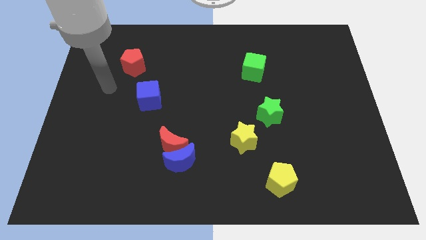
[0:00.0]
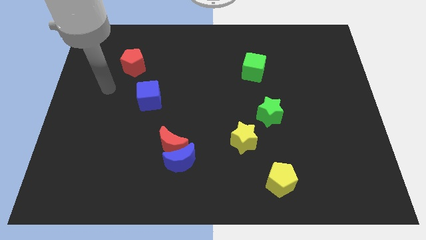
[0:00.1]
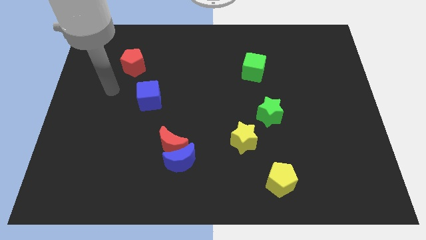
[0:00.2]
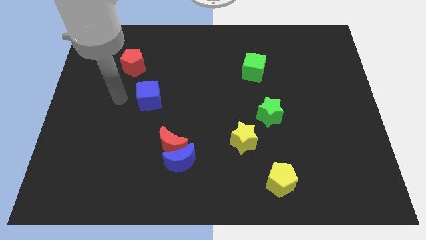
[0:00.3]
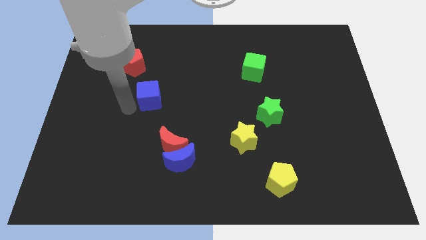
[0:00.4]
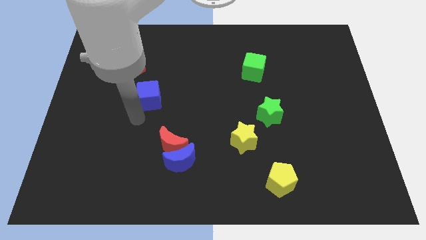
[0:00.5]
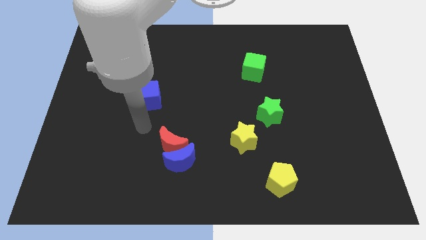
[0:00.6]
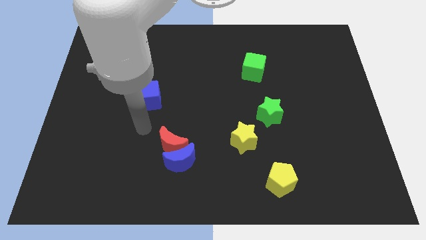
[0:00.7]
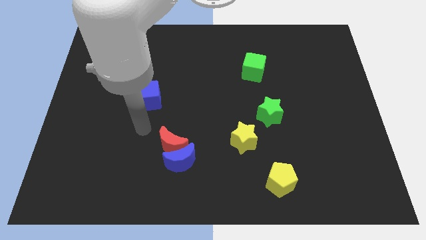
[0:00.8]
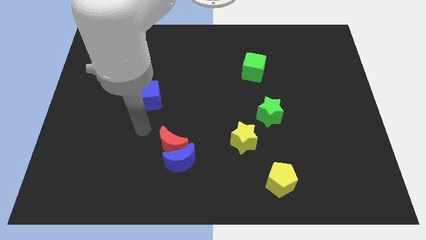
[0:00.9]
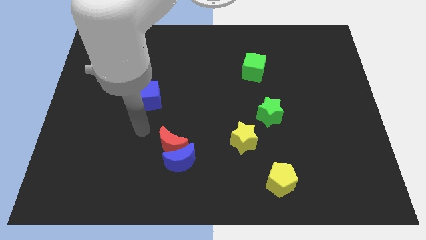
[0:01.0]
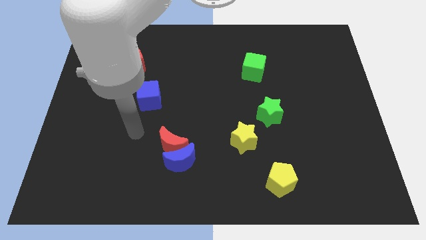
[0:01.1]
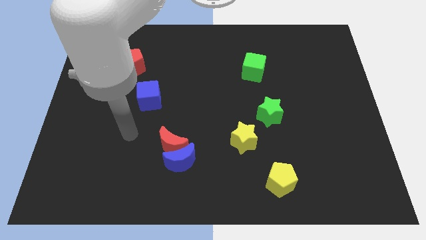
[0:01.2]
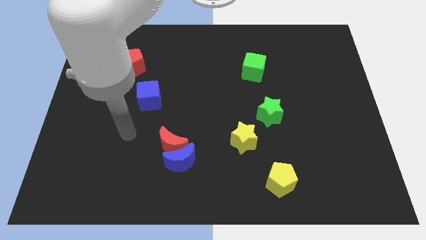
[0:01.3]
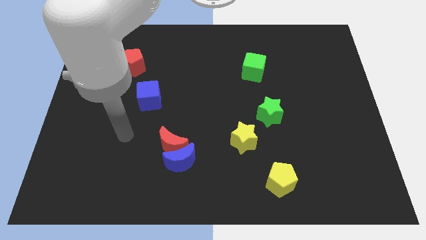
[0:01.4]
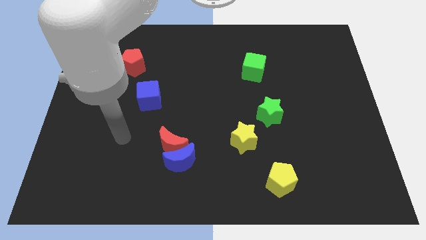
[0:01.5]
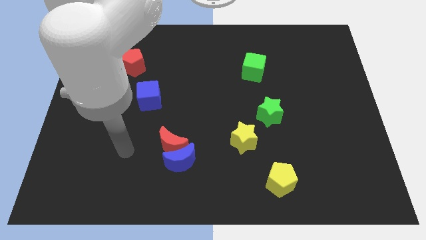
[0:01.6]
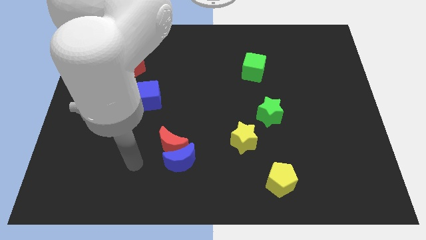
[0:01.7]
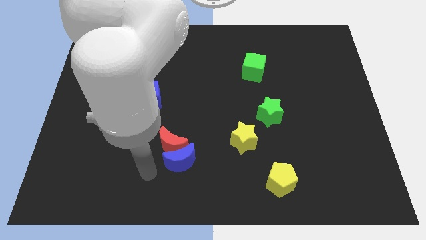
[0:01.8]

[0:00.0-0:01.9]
point your arm at the left of the blue crescent

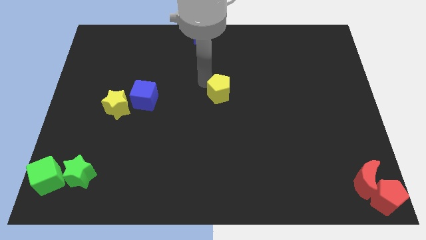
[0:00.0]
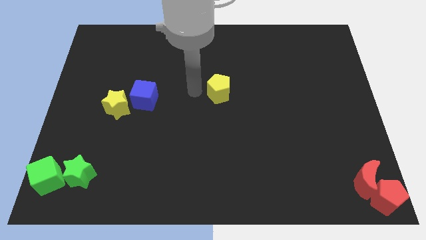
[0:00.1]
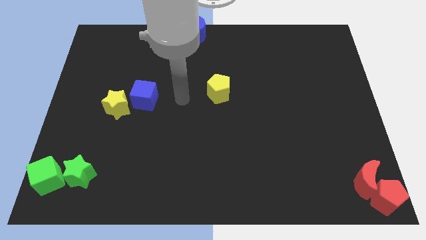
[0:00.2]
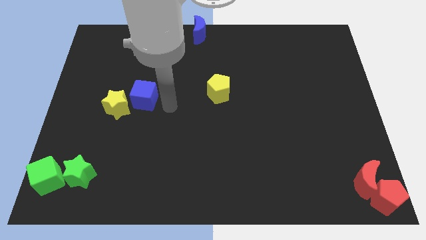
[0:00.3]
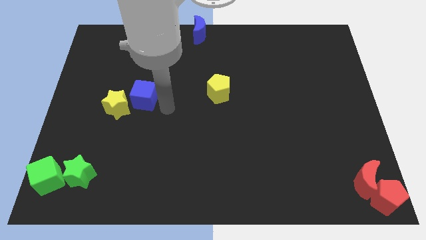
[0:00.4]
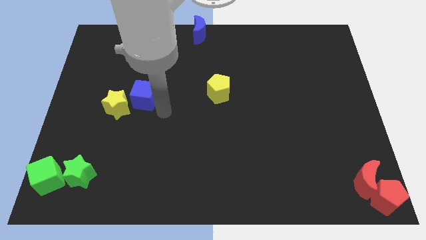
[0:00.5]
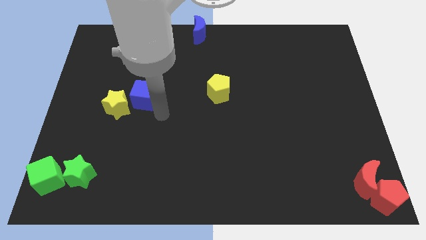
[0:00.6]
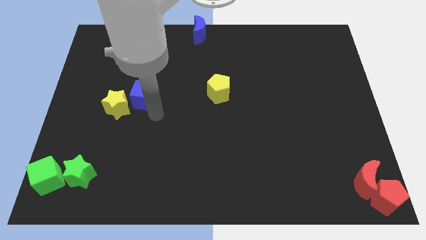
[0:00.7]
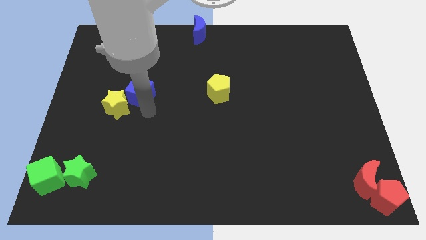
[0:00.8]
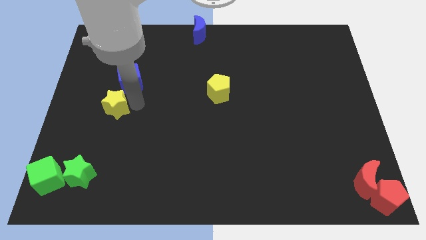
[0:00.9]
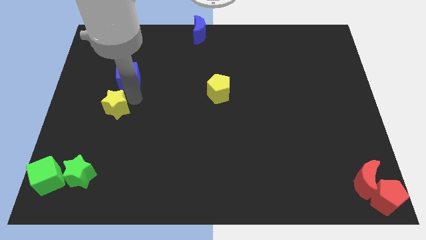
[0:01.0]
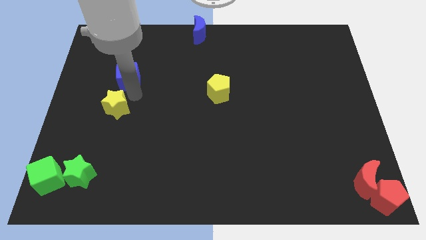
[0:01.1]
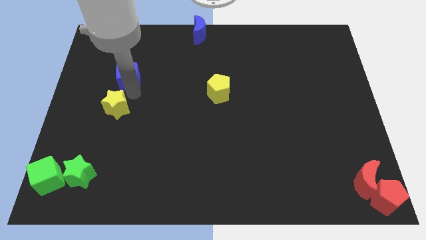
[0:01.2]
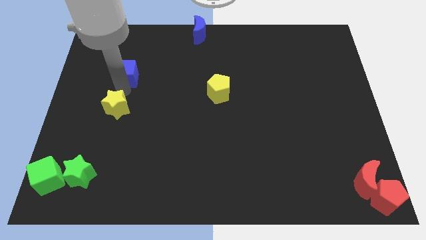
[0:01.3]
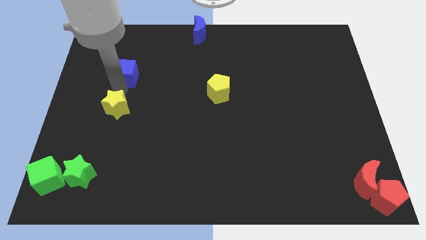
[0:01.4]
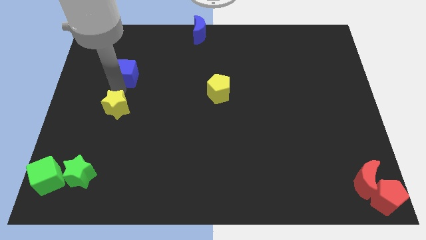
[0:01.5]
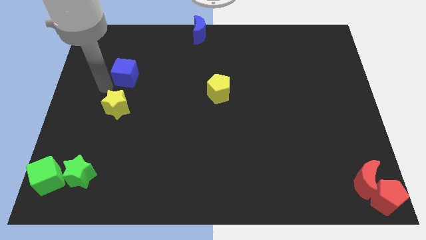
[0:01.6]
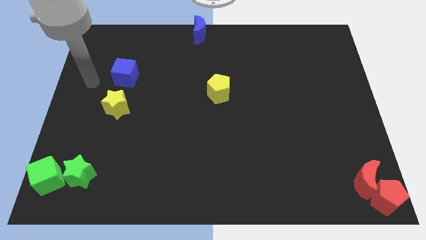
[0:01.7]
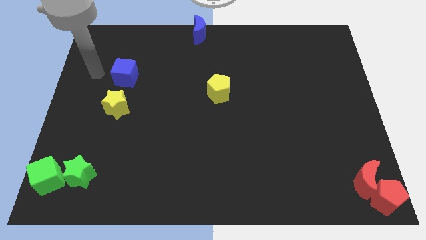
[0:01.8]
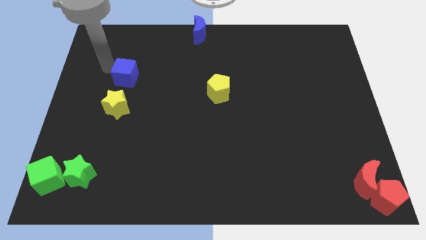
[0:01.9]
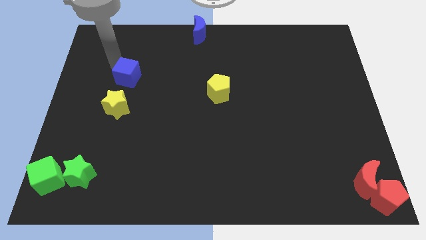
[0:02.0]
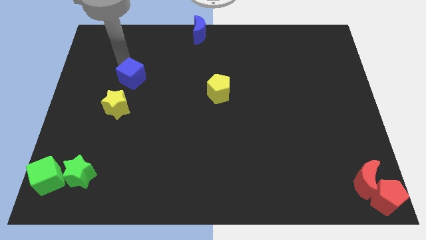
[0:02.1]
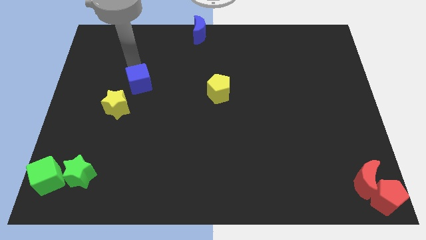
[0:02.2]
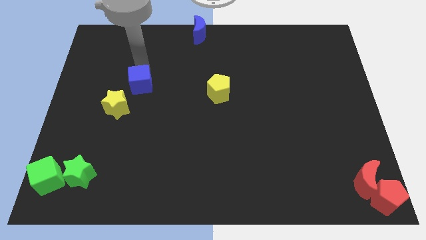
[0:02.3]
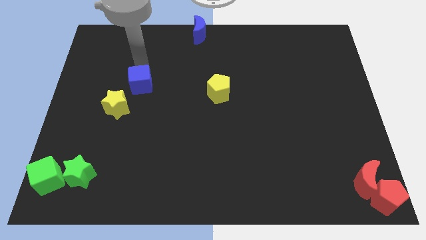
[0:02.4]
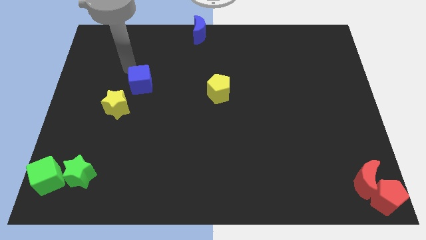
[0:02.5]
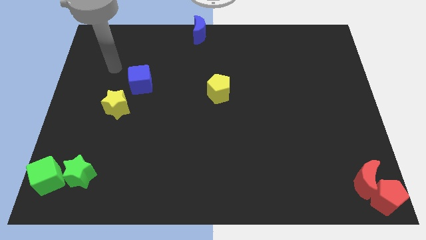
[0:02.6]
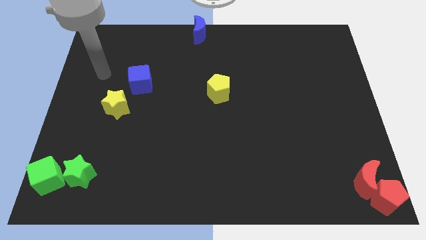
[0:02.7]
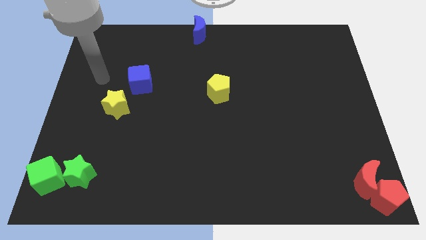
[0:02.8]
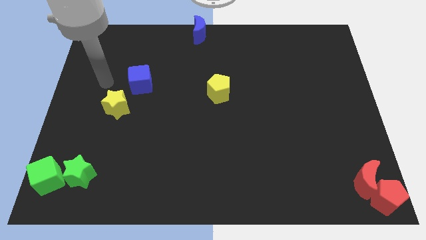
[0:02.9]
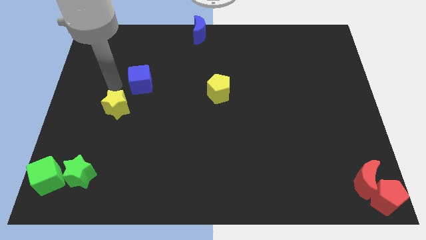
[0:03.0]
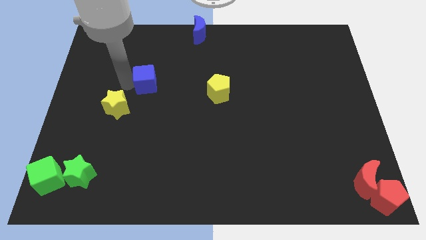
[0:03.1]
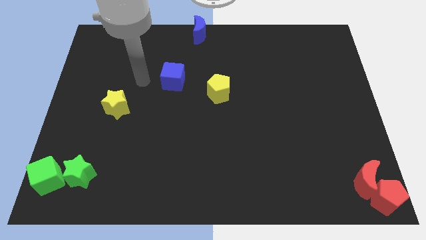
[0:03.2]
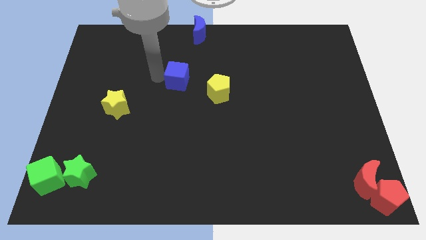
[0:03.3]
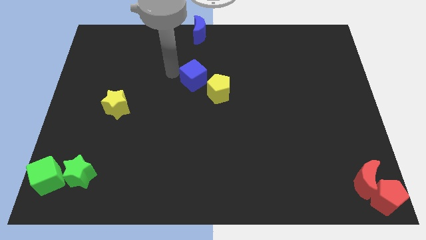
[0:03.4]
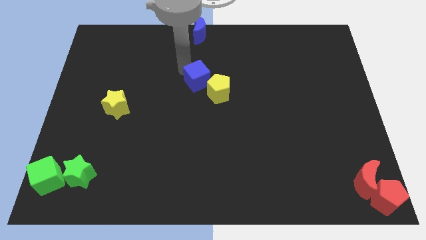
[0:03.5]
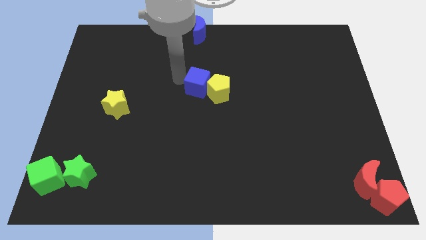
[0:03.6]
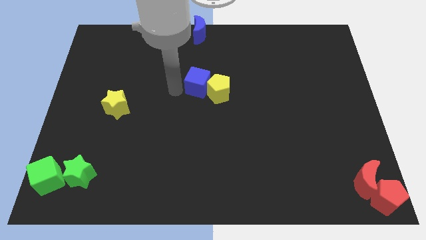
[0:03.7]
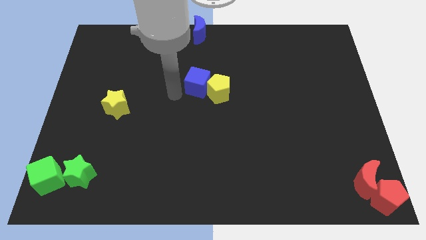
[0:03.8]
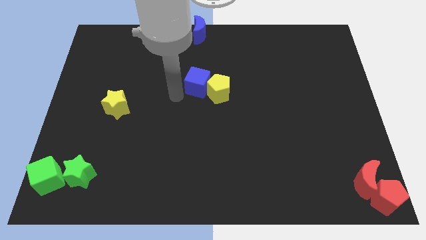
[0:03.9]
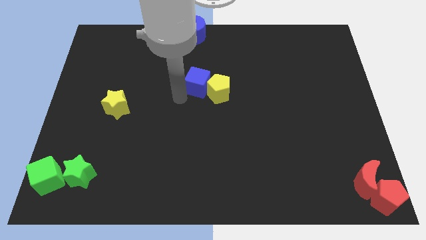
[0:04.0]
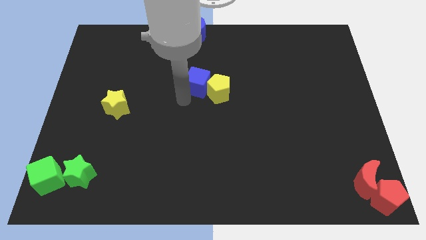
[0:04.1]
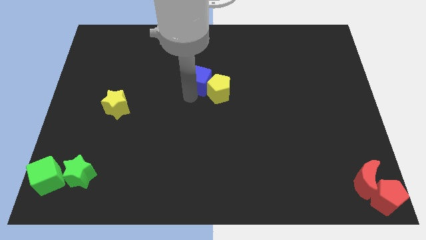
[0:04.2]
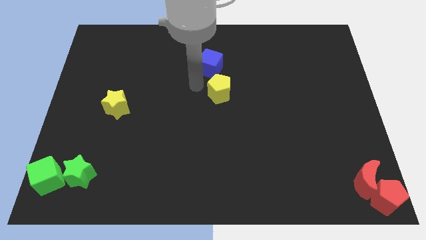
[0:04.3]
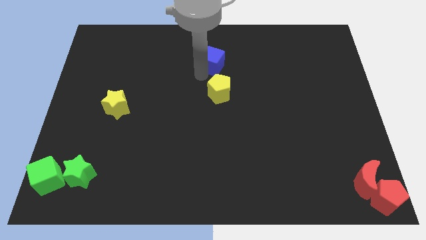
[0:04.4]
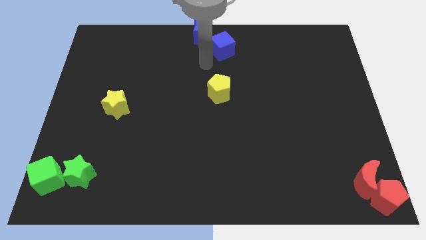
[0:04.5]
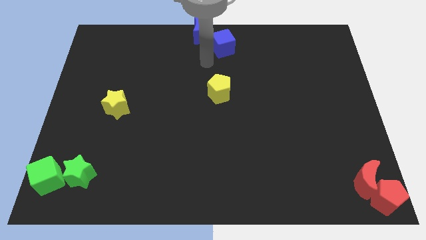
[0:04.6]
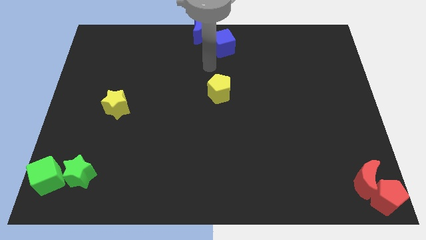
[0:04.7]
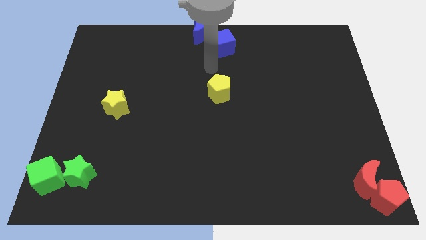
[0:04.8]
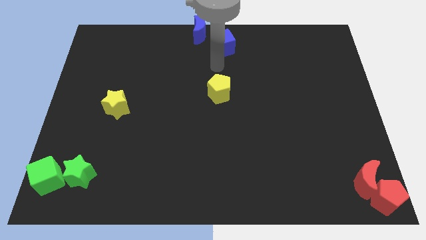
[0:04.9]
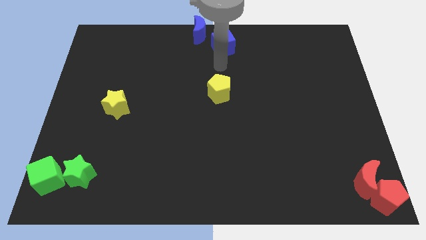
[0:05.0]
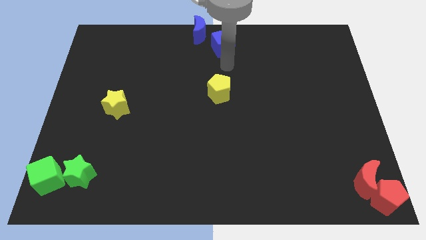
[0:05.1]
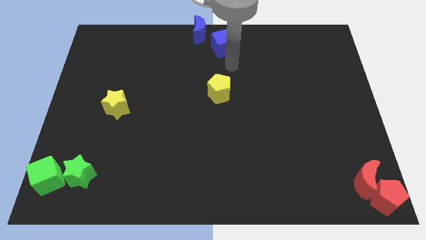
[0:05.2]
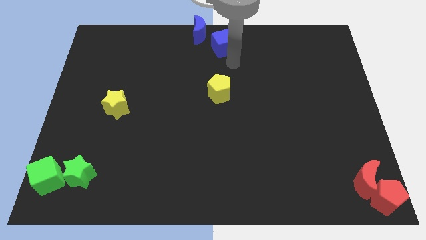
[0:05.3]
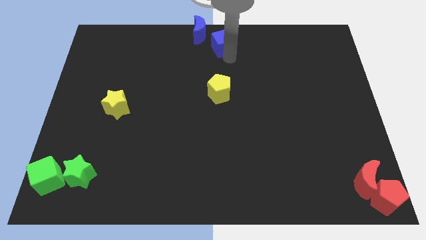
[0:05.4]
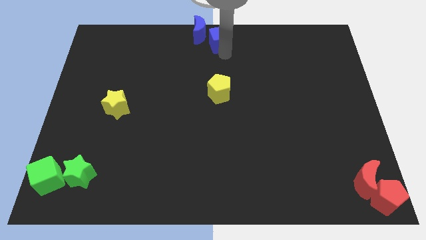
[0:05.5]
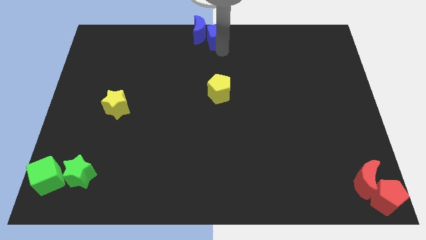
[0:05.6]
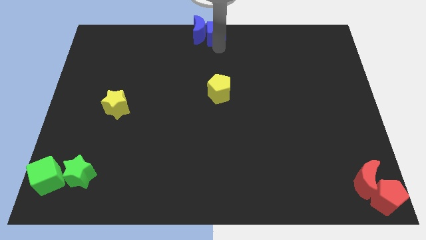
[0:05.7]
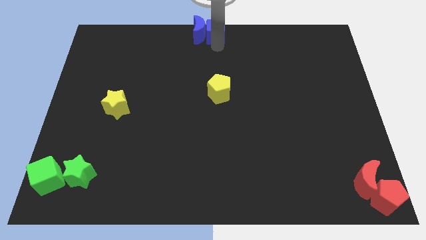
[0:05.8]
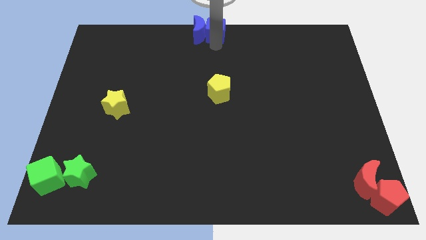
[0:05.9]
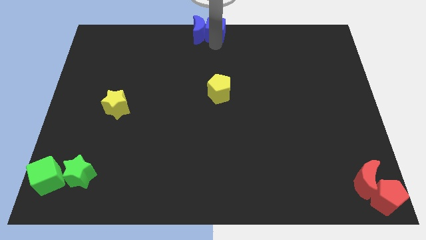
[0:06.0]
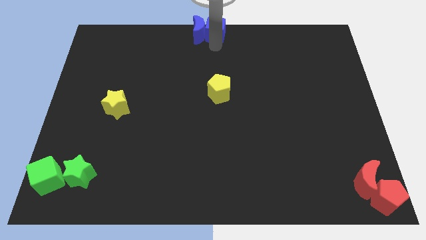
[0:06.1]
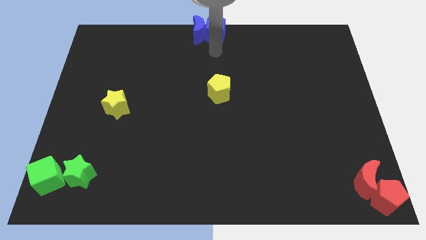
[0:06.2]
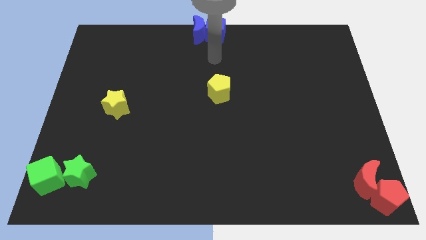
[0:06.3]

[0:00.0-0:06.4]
place the blue cube at the top center

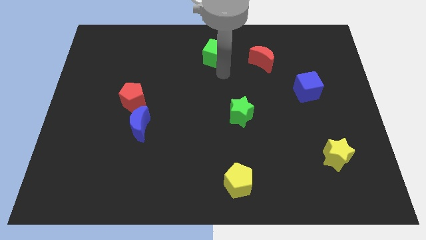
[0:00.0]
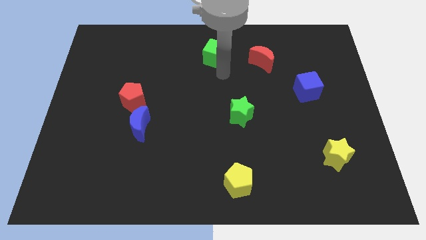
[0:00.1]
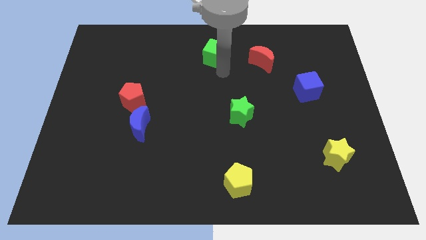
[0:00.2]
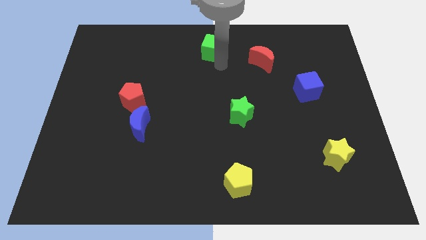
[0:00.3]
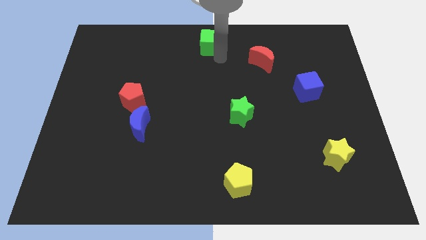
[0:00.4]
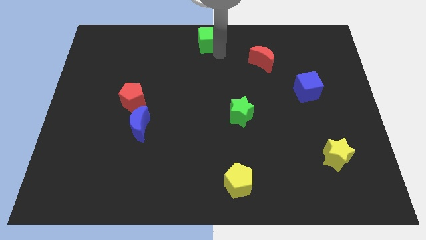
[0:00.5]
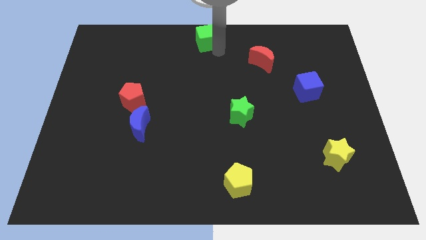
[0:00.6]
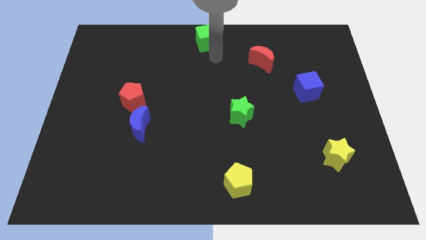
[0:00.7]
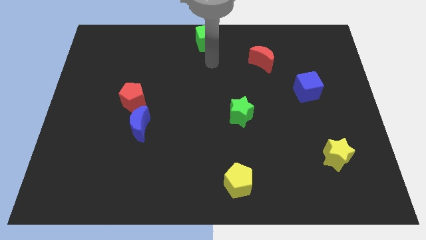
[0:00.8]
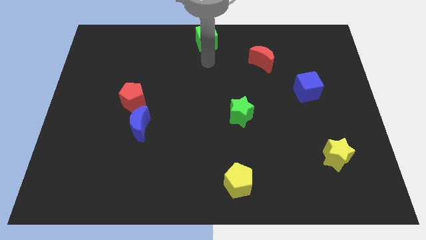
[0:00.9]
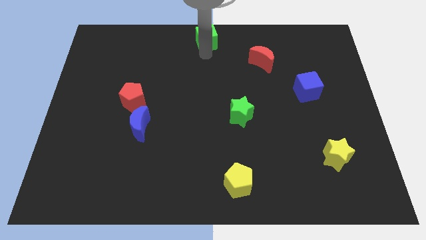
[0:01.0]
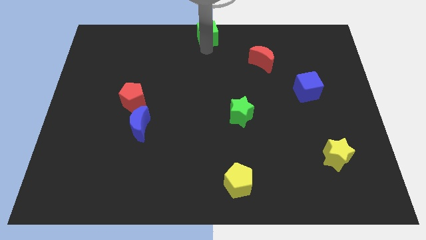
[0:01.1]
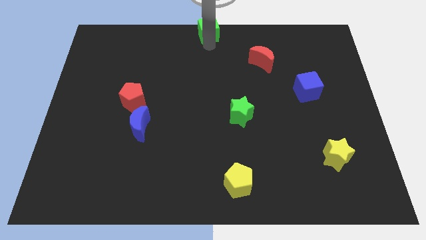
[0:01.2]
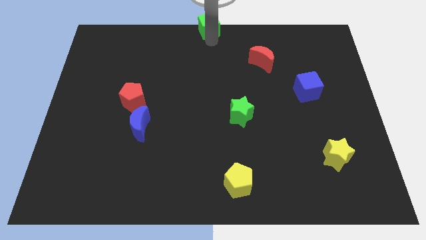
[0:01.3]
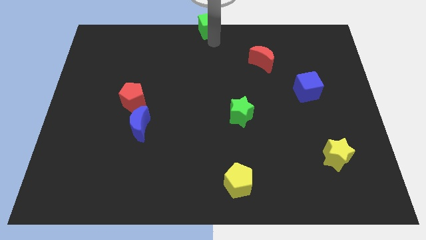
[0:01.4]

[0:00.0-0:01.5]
push the green cube to the top center of the board
